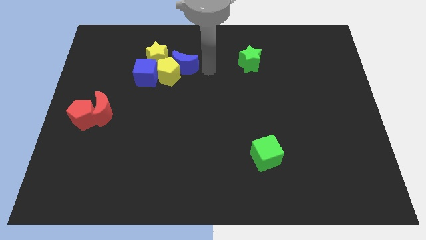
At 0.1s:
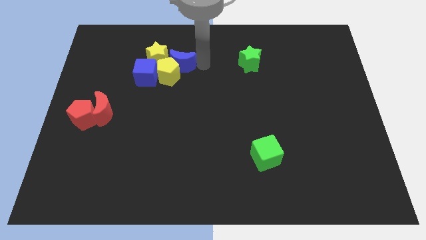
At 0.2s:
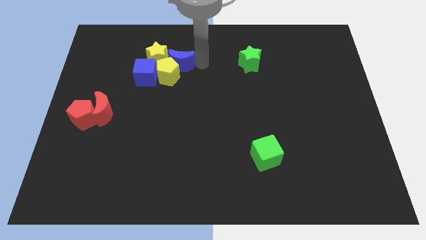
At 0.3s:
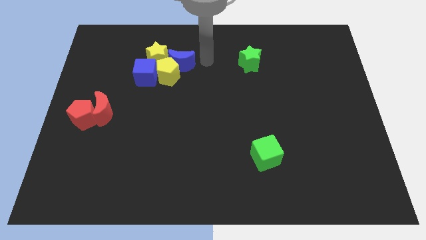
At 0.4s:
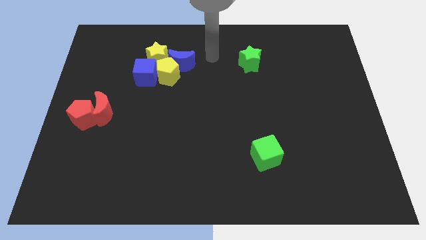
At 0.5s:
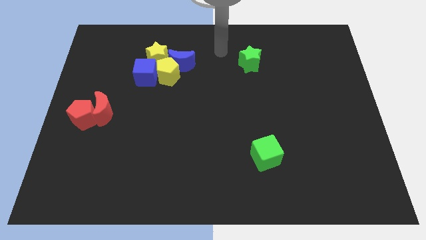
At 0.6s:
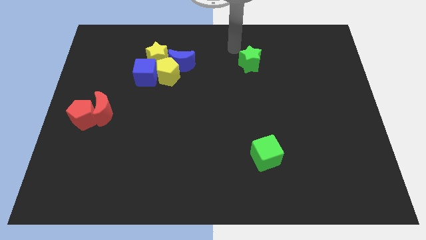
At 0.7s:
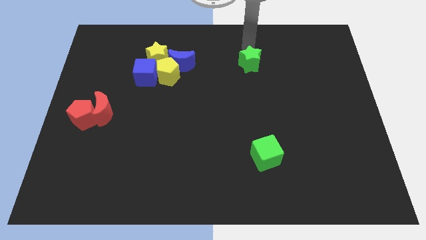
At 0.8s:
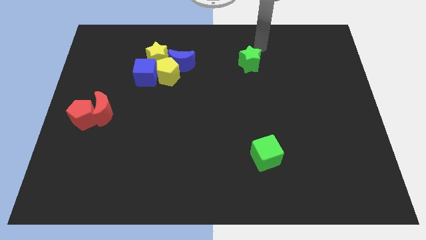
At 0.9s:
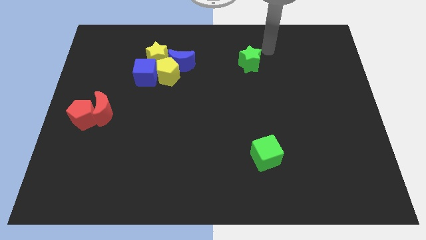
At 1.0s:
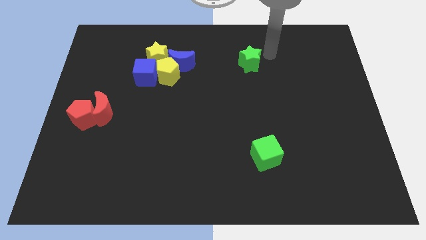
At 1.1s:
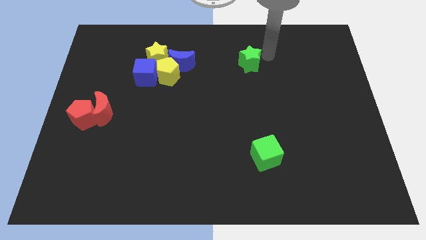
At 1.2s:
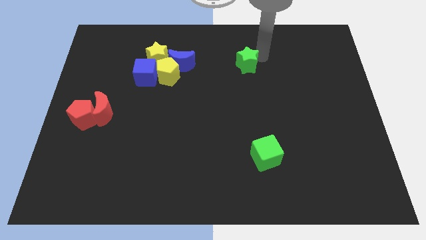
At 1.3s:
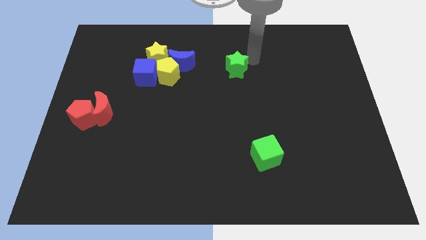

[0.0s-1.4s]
touch the green star

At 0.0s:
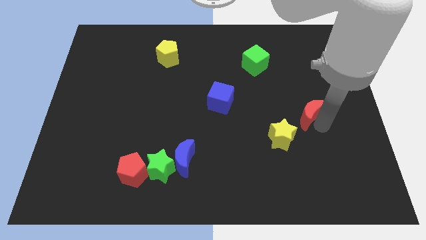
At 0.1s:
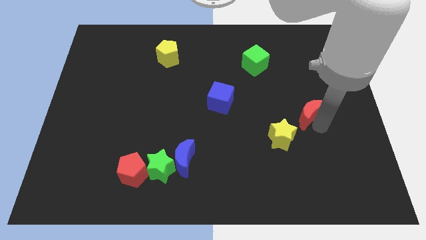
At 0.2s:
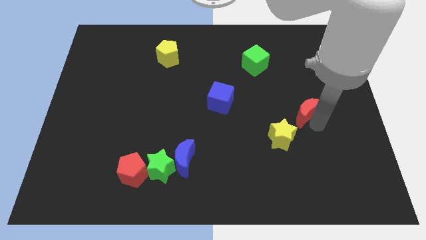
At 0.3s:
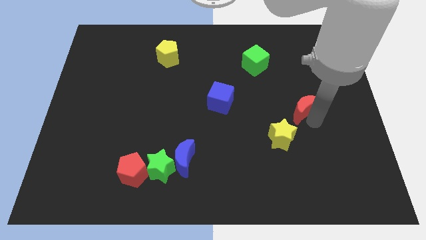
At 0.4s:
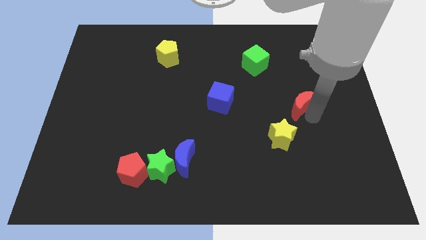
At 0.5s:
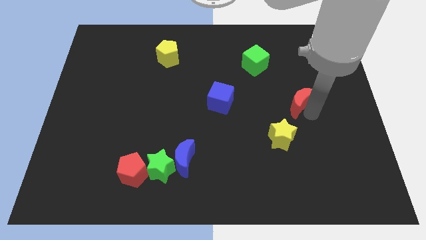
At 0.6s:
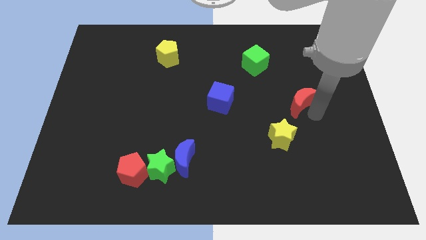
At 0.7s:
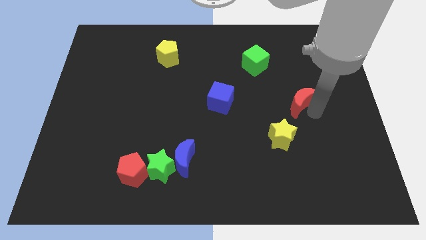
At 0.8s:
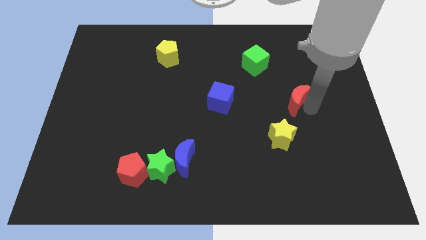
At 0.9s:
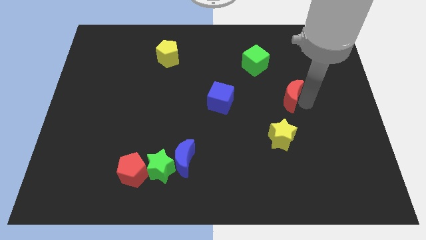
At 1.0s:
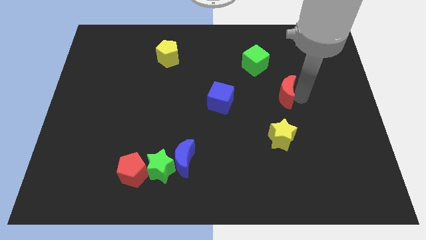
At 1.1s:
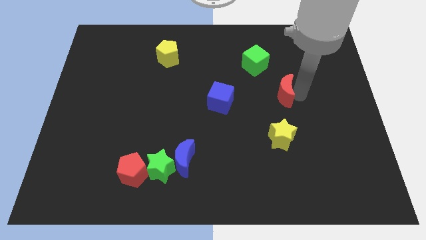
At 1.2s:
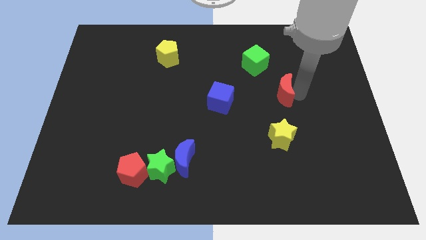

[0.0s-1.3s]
move red moon upwards

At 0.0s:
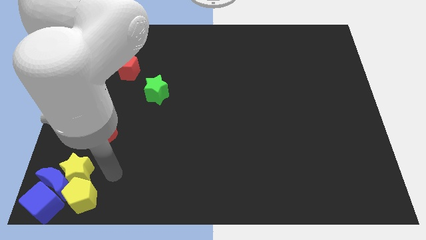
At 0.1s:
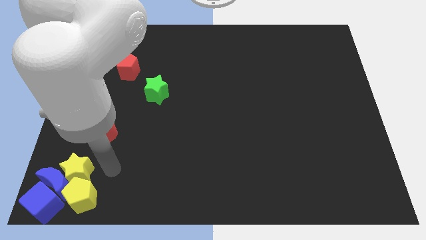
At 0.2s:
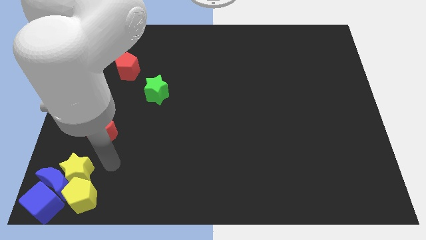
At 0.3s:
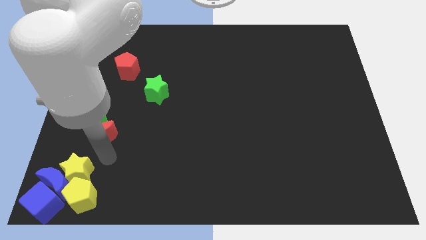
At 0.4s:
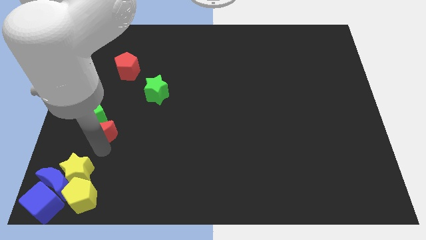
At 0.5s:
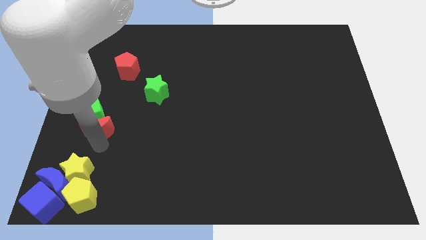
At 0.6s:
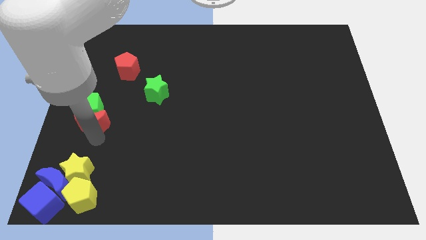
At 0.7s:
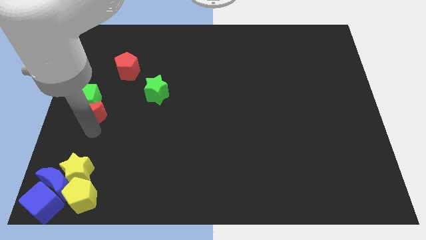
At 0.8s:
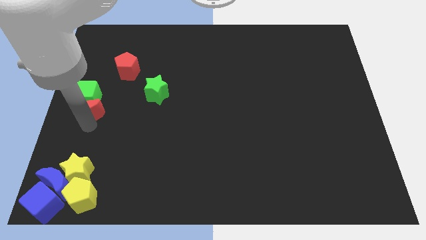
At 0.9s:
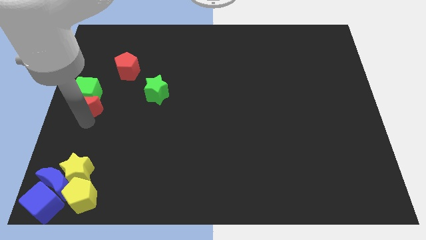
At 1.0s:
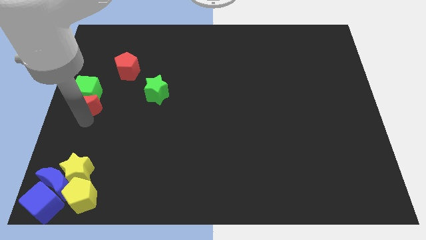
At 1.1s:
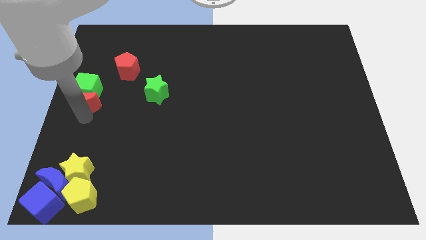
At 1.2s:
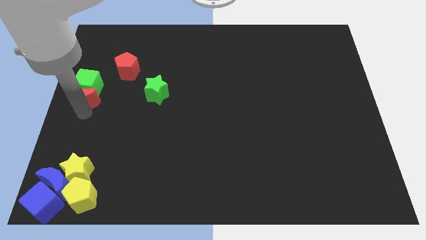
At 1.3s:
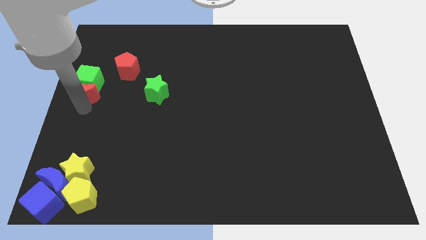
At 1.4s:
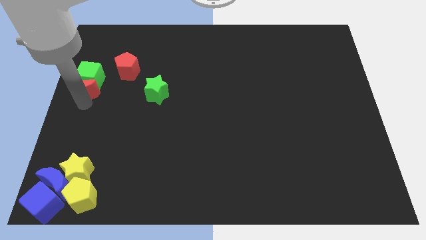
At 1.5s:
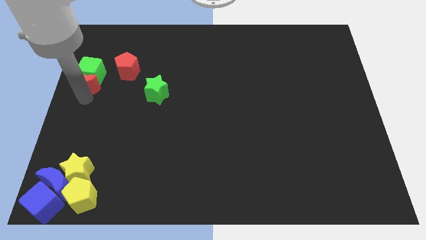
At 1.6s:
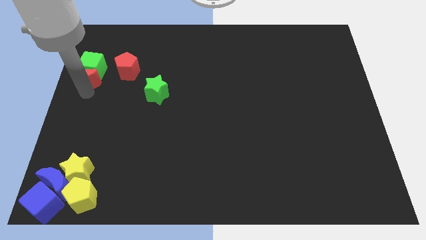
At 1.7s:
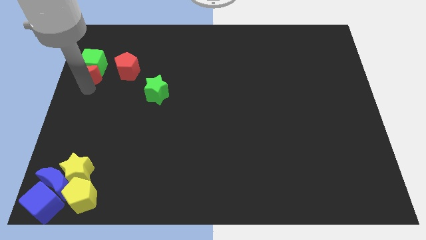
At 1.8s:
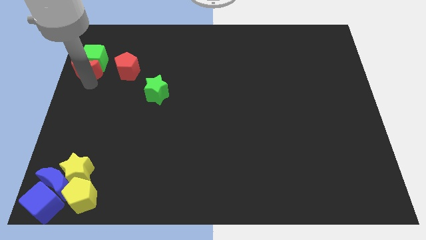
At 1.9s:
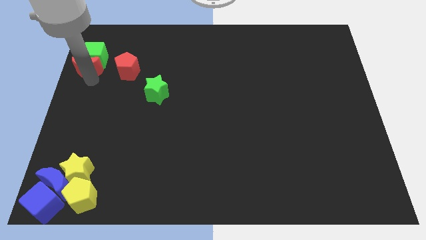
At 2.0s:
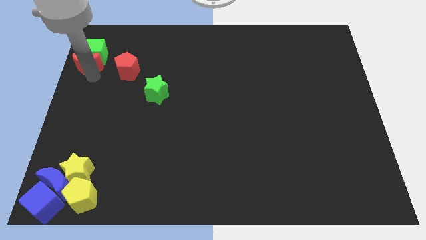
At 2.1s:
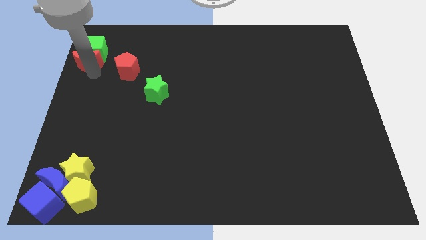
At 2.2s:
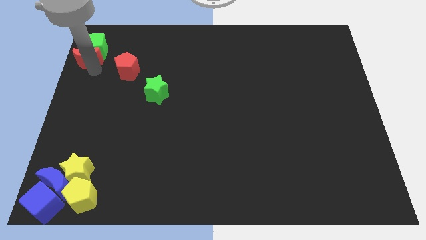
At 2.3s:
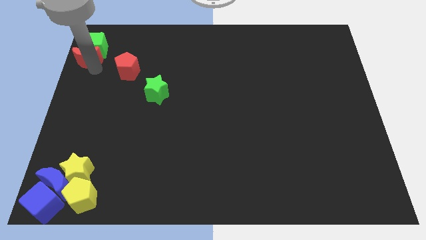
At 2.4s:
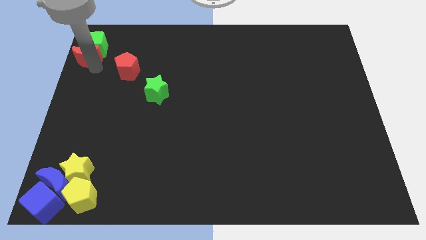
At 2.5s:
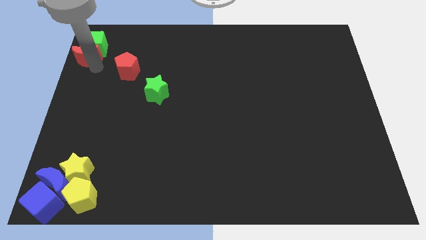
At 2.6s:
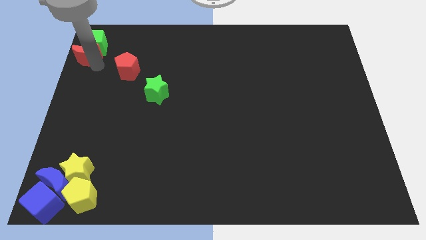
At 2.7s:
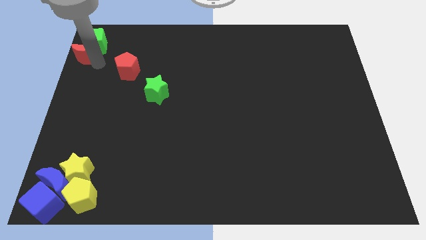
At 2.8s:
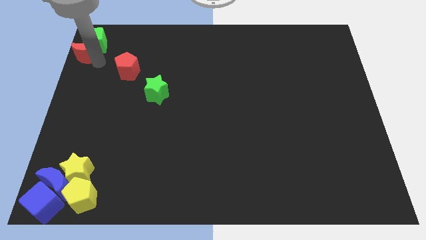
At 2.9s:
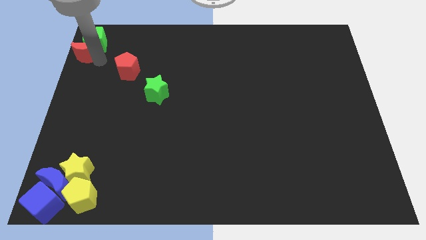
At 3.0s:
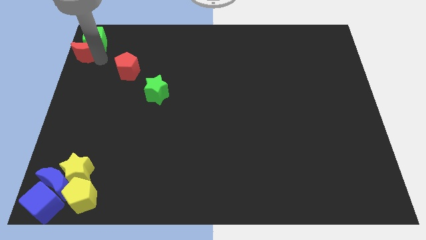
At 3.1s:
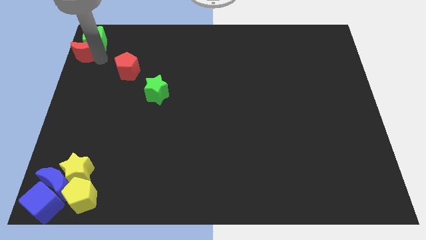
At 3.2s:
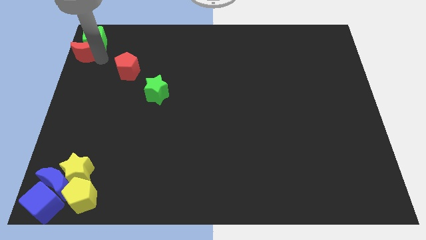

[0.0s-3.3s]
push the red crescent along with green cube to the top left to the board

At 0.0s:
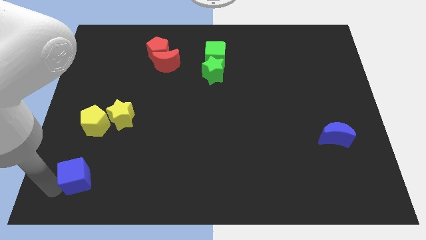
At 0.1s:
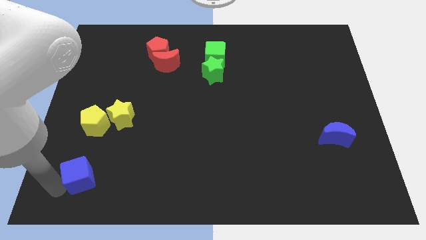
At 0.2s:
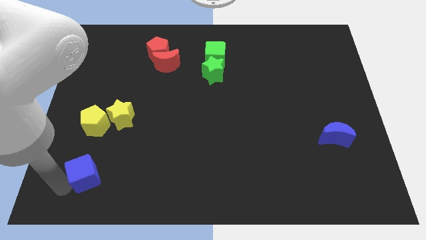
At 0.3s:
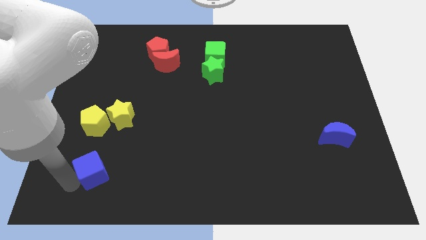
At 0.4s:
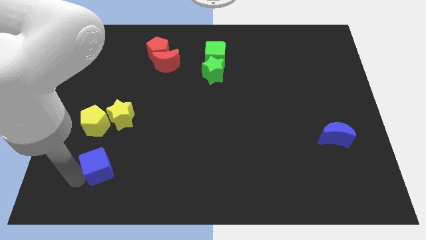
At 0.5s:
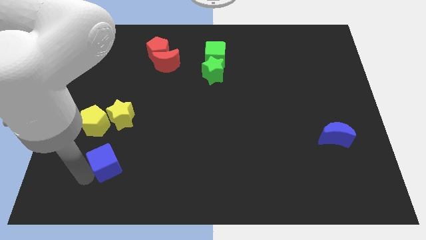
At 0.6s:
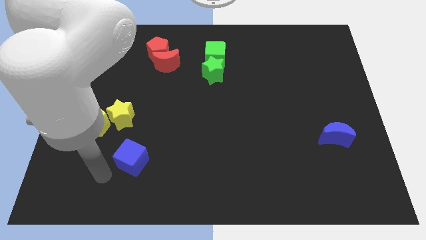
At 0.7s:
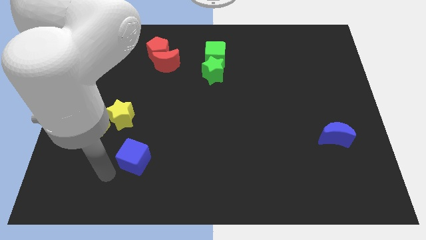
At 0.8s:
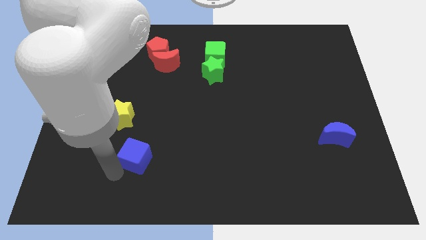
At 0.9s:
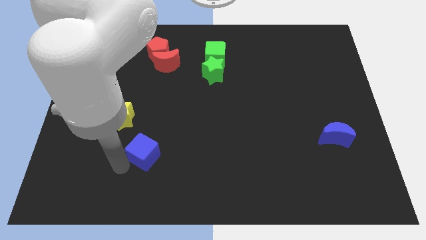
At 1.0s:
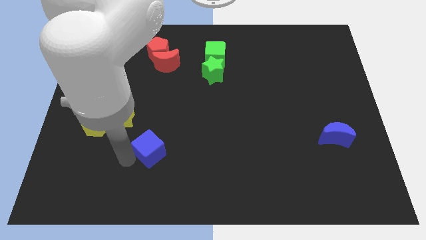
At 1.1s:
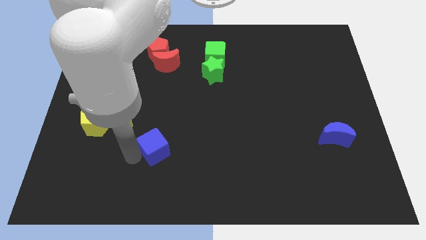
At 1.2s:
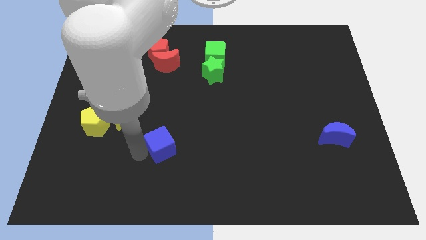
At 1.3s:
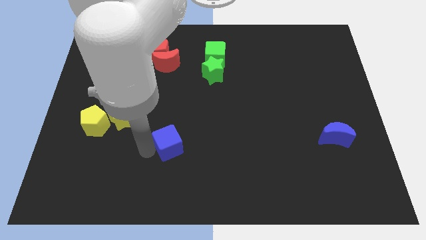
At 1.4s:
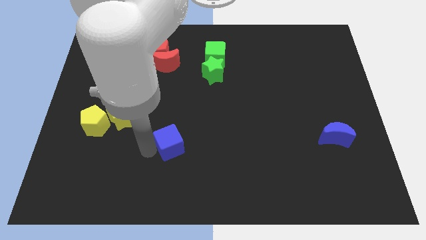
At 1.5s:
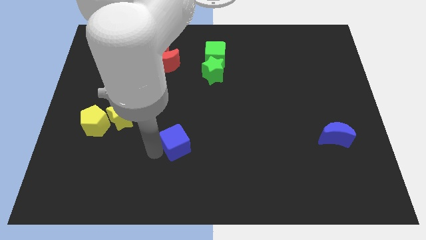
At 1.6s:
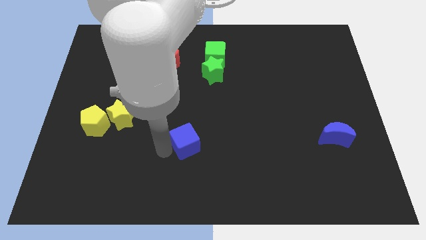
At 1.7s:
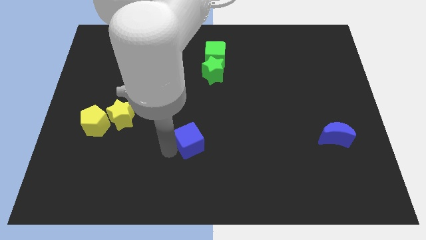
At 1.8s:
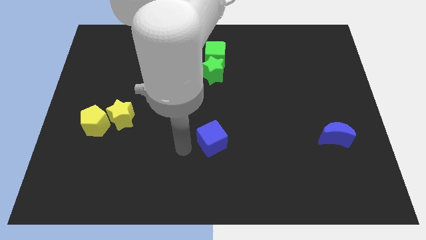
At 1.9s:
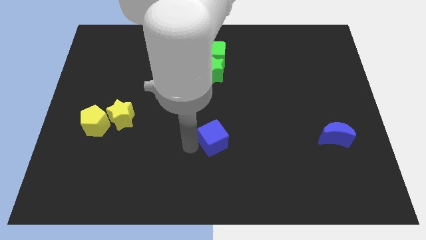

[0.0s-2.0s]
push the blue cube to towards the center of the board

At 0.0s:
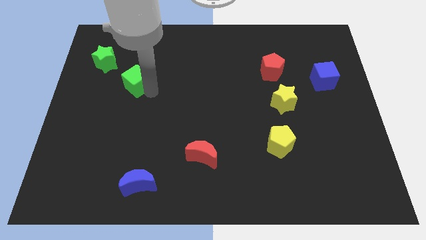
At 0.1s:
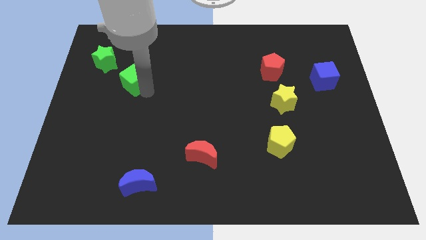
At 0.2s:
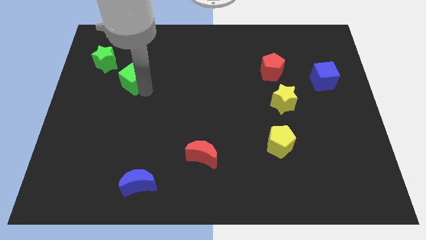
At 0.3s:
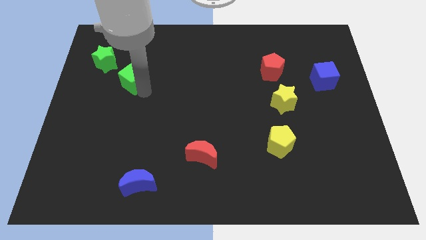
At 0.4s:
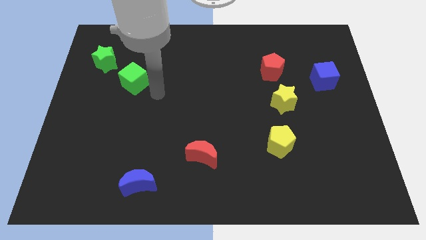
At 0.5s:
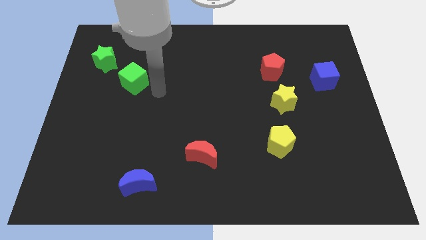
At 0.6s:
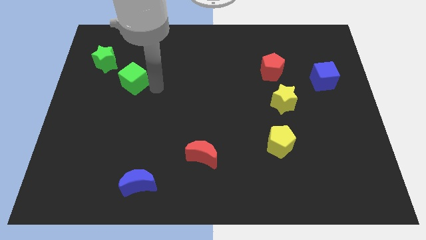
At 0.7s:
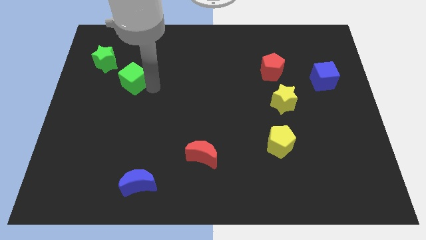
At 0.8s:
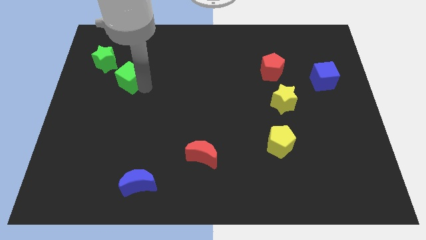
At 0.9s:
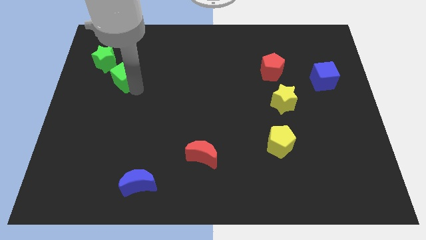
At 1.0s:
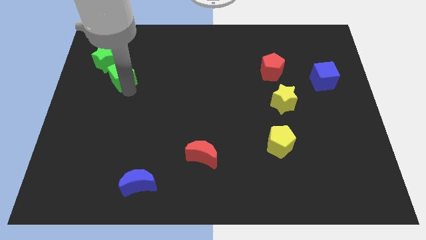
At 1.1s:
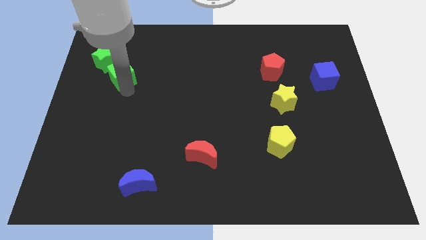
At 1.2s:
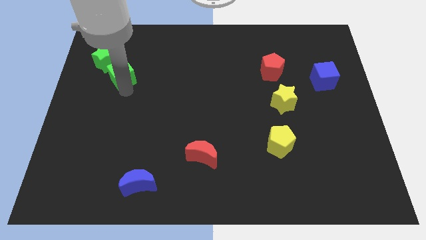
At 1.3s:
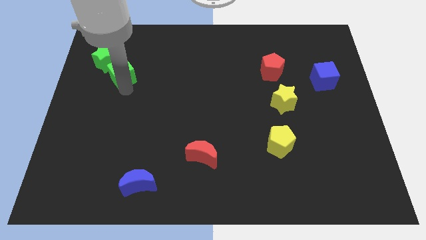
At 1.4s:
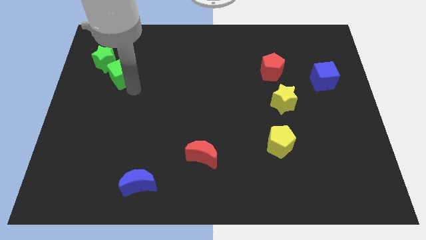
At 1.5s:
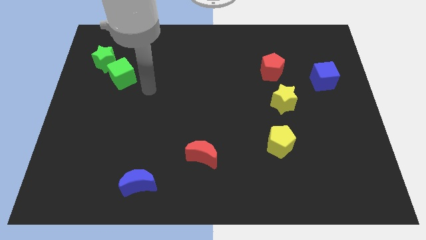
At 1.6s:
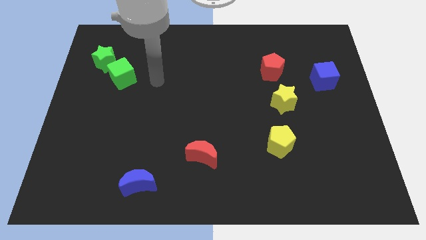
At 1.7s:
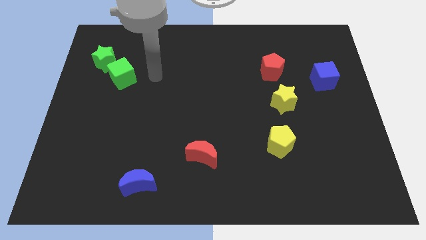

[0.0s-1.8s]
push the green cube into the green star
